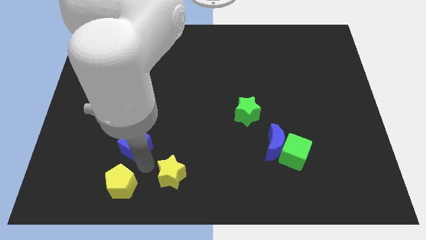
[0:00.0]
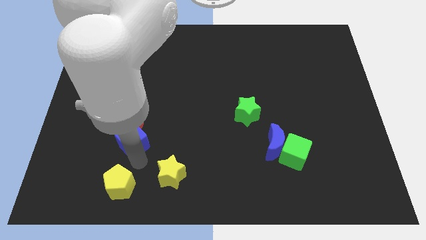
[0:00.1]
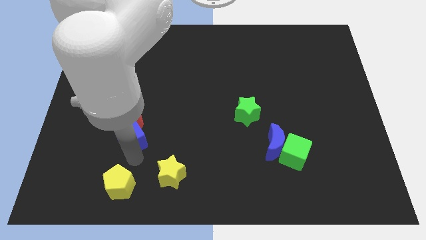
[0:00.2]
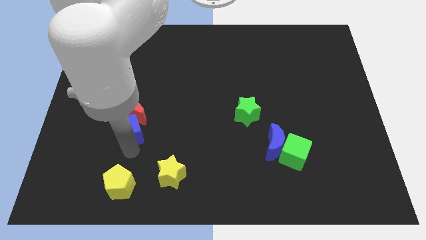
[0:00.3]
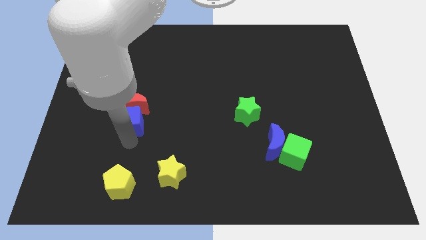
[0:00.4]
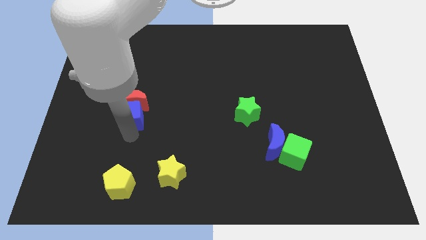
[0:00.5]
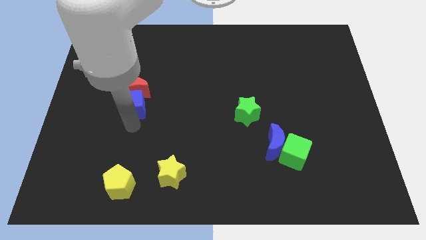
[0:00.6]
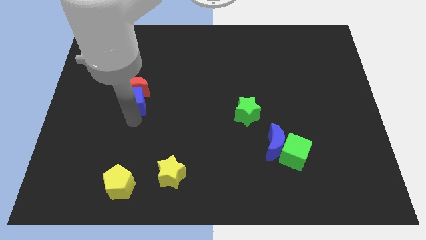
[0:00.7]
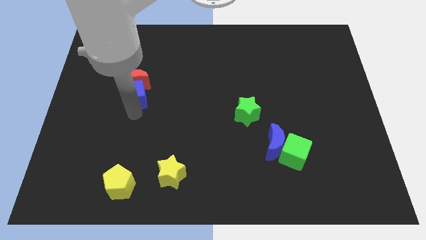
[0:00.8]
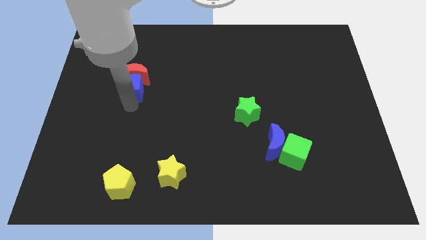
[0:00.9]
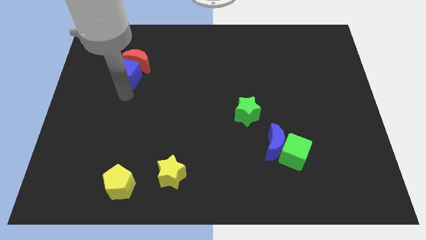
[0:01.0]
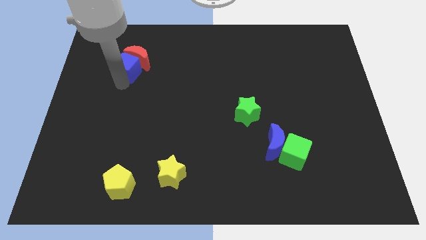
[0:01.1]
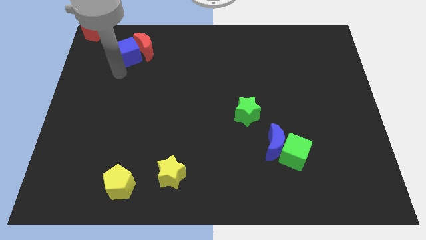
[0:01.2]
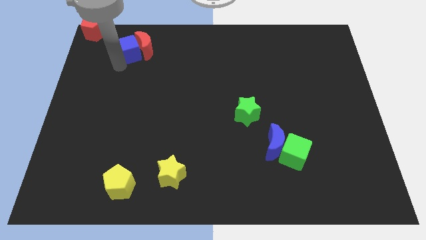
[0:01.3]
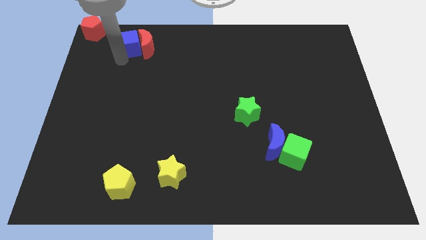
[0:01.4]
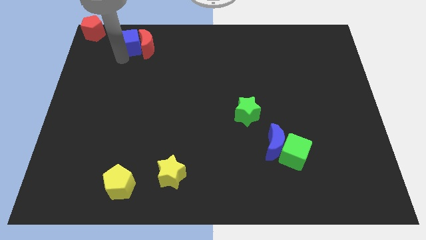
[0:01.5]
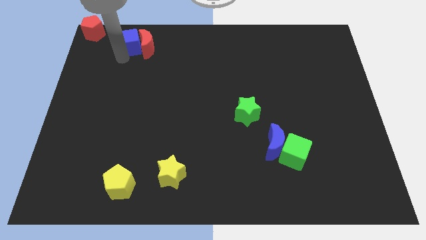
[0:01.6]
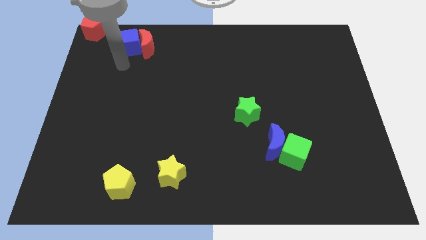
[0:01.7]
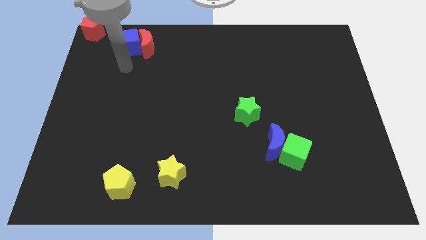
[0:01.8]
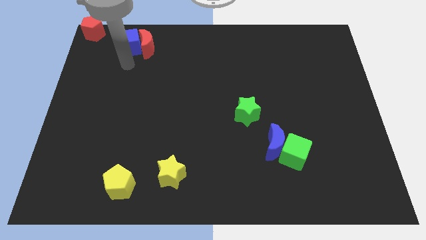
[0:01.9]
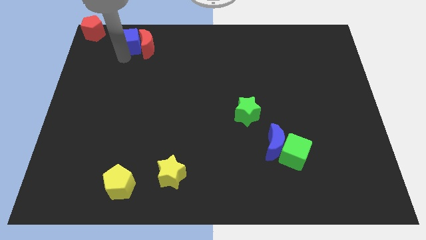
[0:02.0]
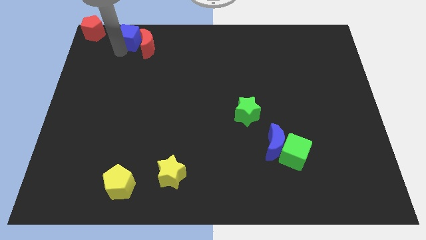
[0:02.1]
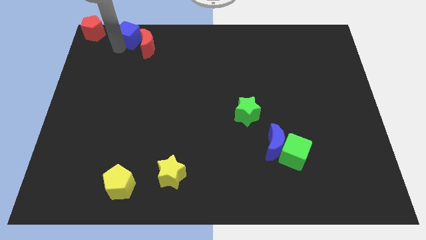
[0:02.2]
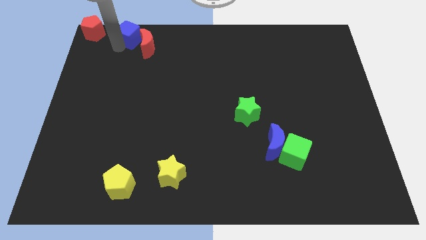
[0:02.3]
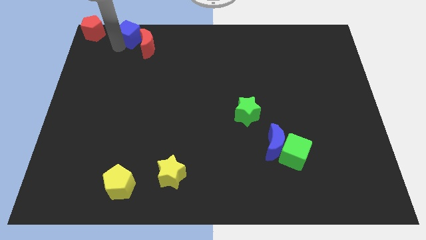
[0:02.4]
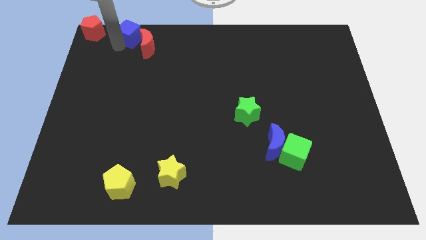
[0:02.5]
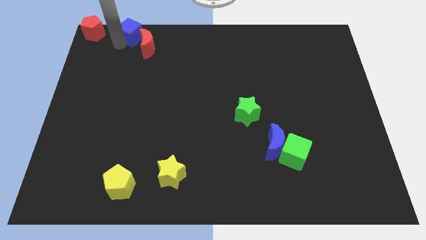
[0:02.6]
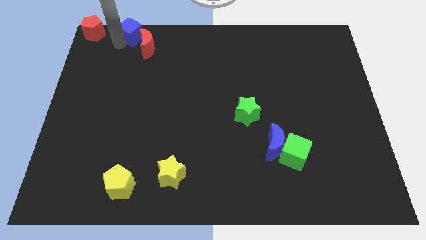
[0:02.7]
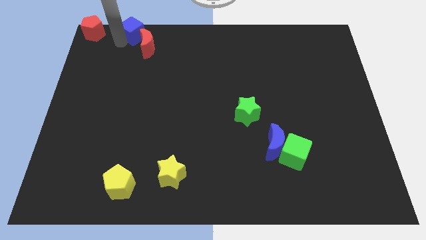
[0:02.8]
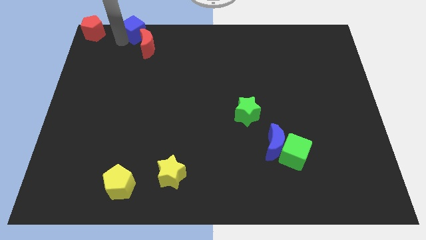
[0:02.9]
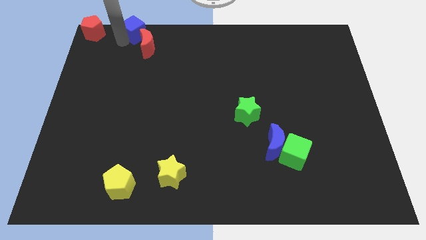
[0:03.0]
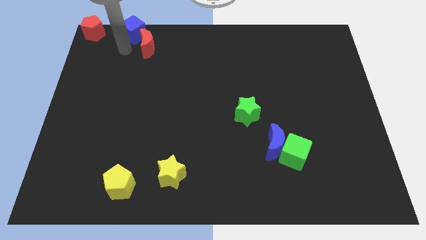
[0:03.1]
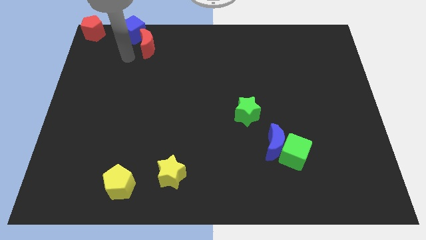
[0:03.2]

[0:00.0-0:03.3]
move the blue cube and red crescent together to the right side of the red pentagon

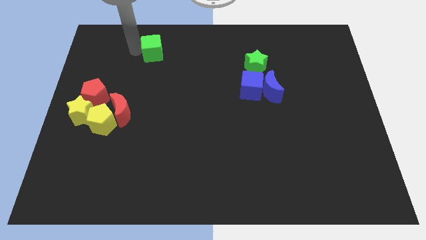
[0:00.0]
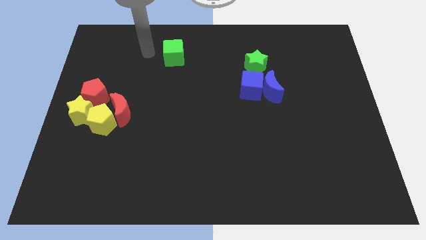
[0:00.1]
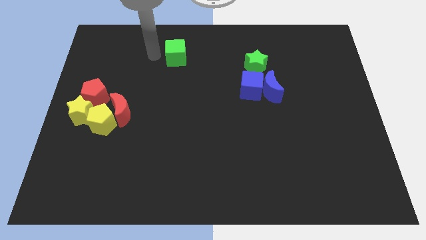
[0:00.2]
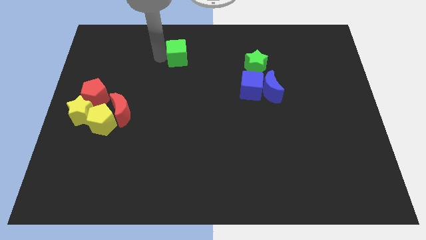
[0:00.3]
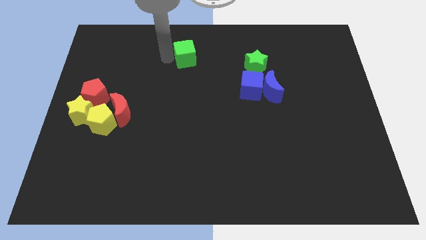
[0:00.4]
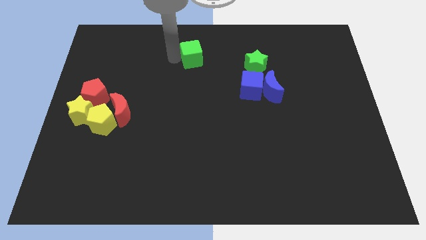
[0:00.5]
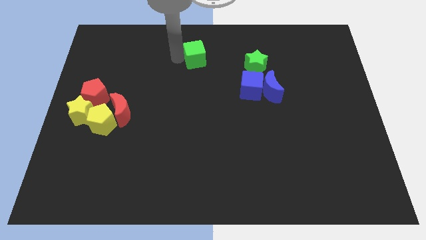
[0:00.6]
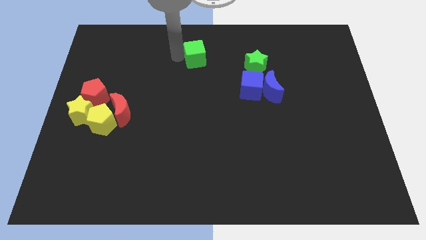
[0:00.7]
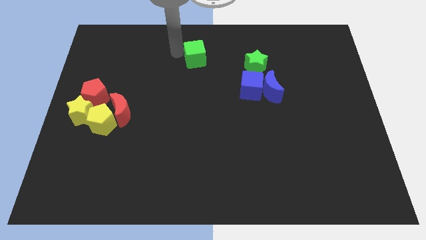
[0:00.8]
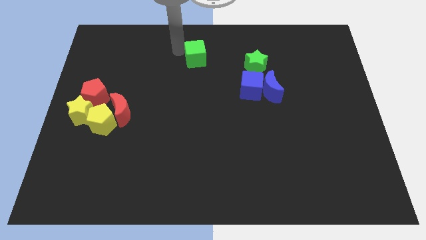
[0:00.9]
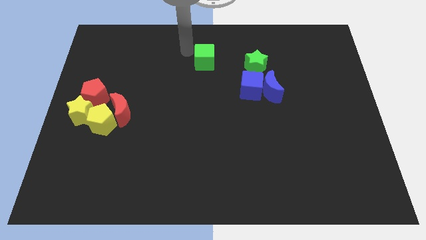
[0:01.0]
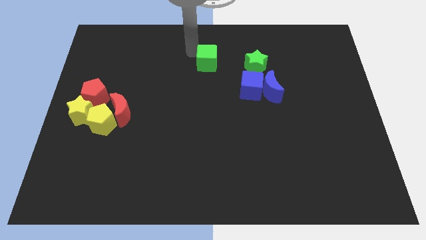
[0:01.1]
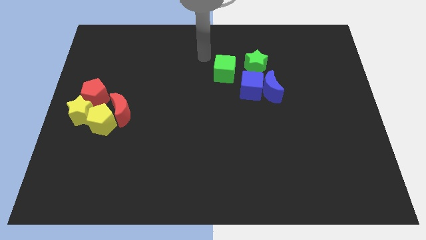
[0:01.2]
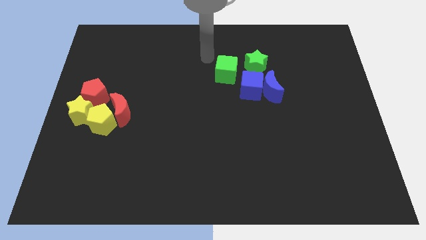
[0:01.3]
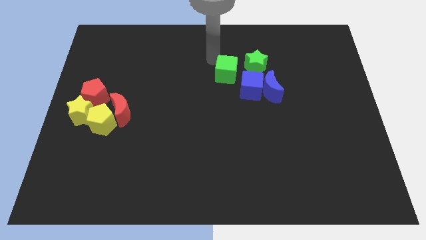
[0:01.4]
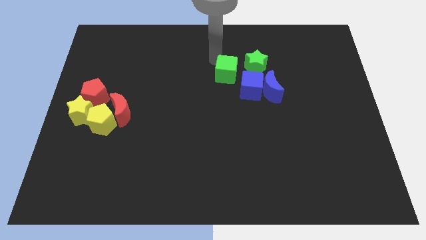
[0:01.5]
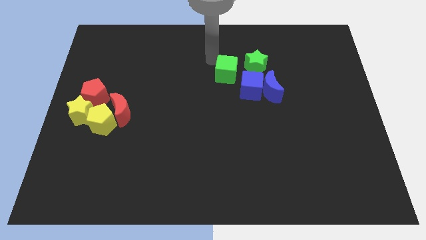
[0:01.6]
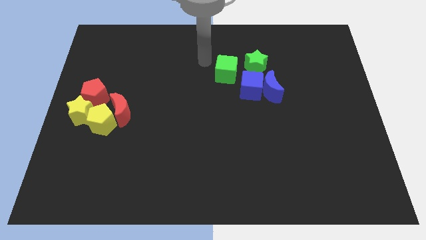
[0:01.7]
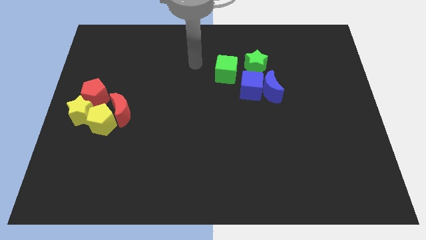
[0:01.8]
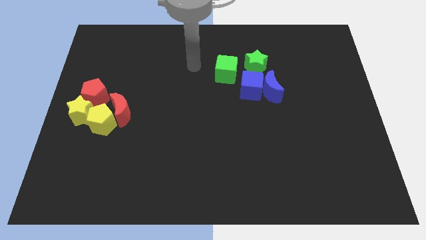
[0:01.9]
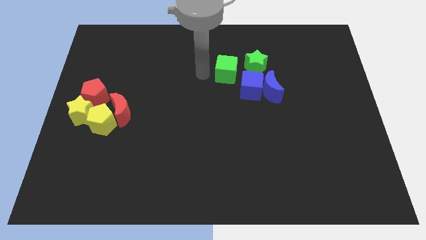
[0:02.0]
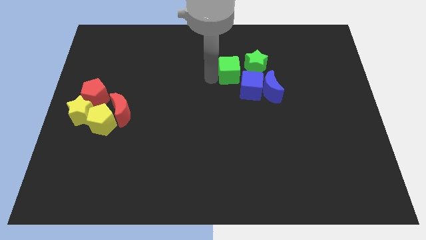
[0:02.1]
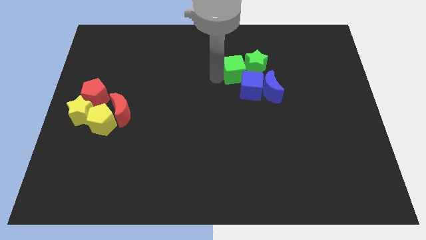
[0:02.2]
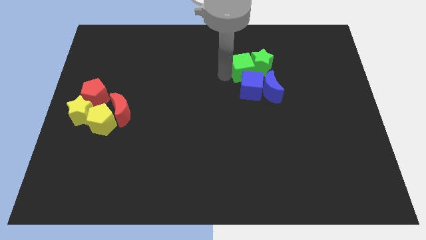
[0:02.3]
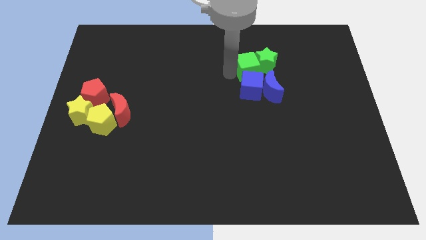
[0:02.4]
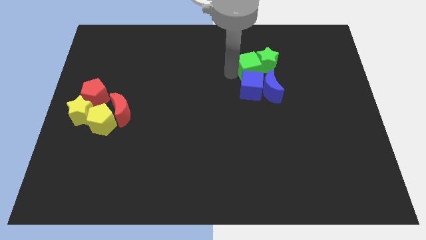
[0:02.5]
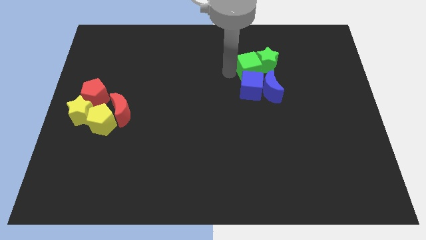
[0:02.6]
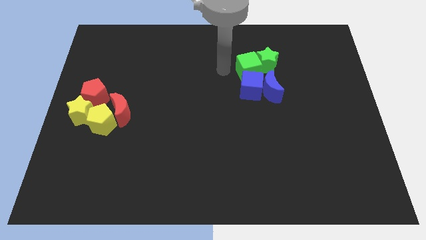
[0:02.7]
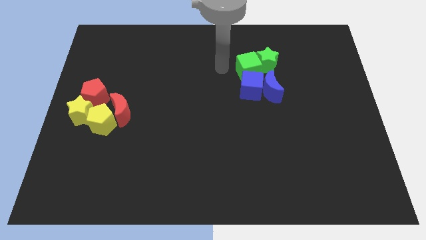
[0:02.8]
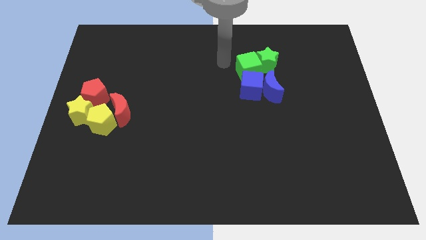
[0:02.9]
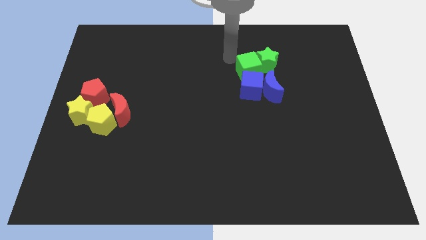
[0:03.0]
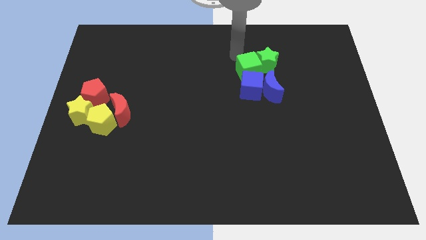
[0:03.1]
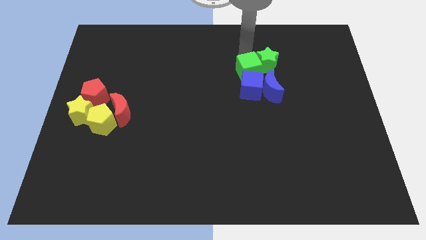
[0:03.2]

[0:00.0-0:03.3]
place the green cube to the left side of green star

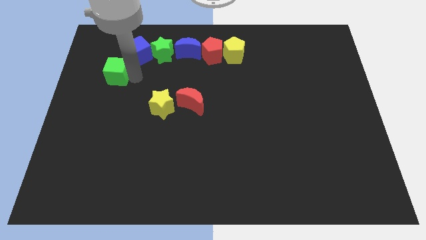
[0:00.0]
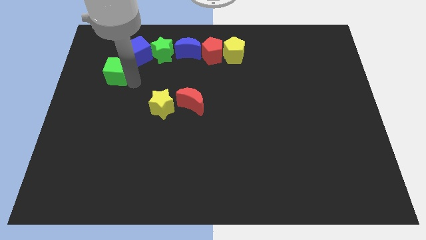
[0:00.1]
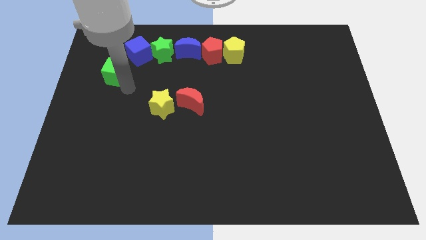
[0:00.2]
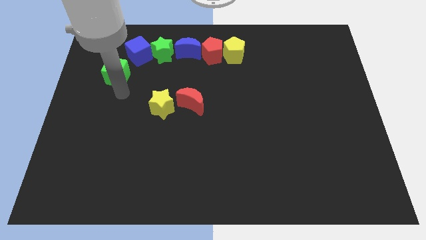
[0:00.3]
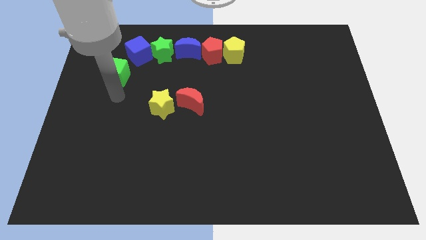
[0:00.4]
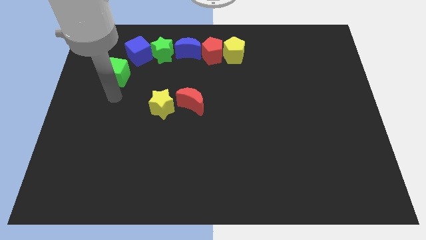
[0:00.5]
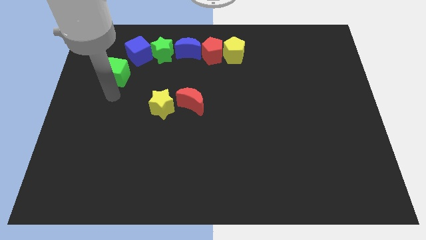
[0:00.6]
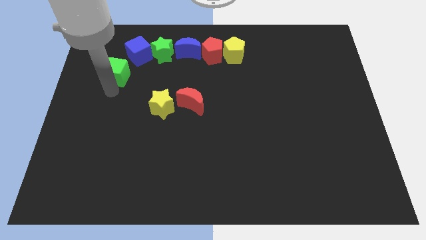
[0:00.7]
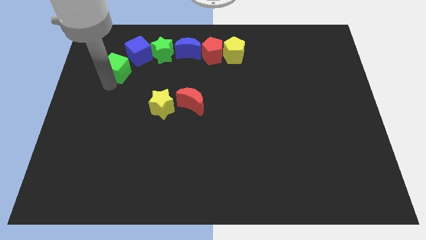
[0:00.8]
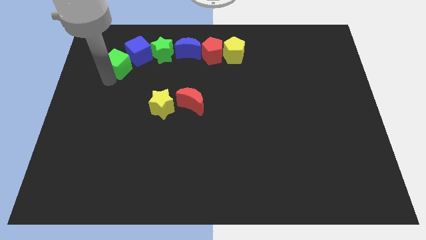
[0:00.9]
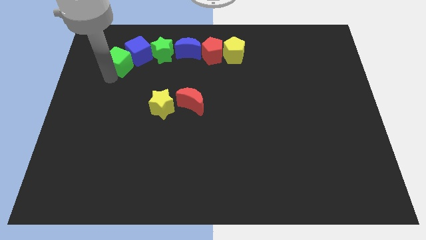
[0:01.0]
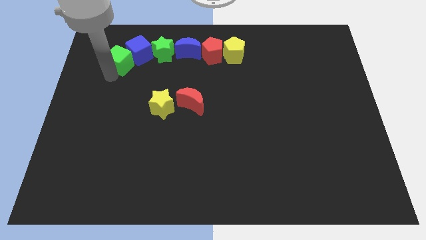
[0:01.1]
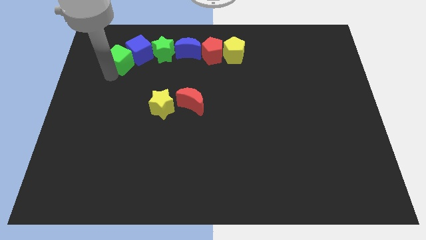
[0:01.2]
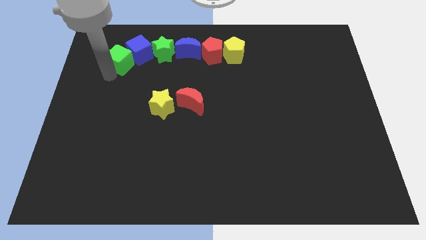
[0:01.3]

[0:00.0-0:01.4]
place green cube left to the blue cube

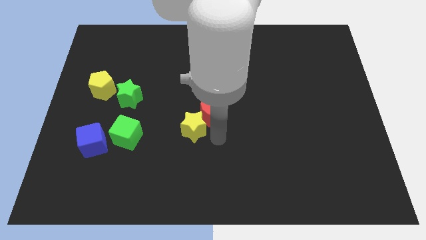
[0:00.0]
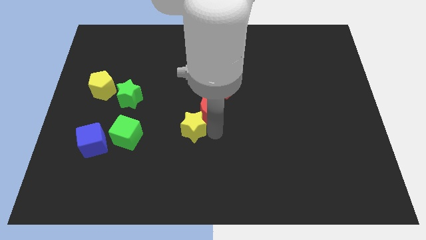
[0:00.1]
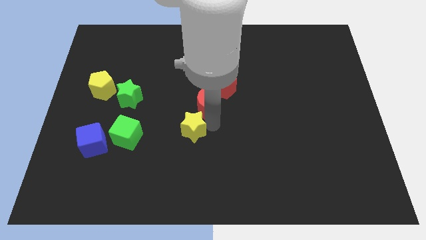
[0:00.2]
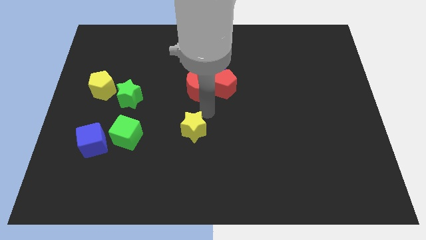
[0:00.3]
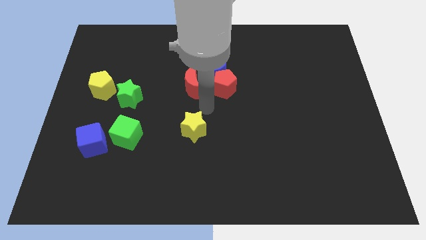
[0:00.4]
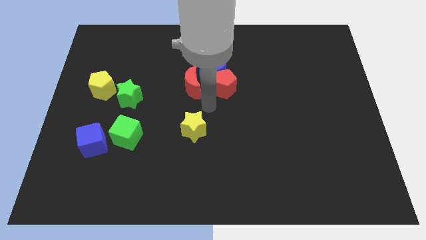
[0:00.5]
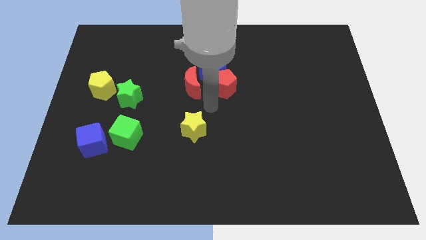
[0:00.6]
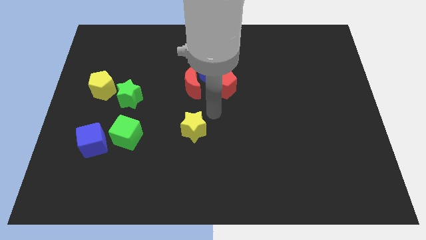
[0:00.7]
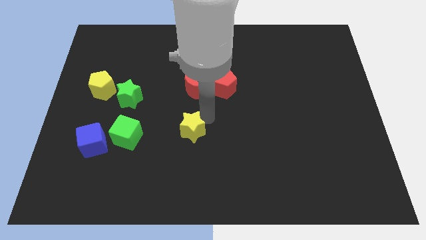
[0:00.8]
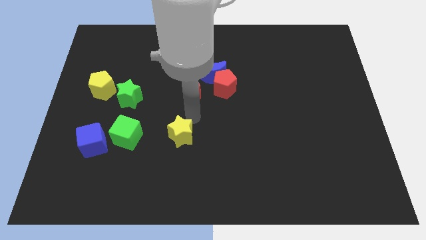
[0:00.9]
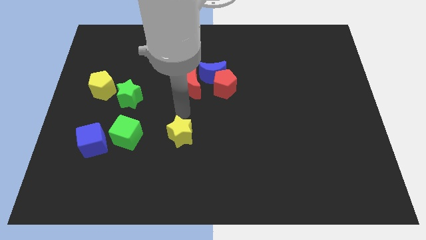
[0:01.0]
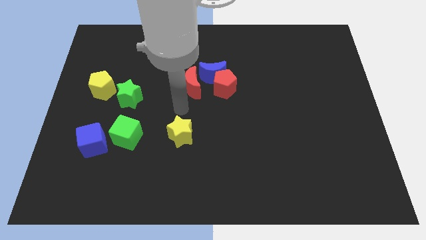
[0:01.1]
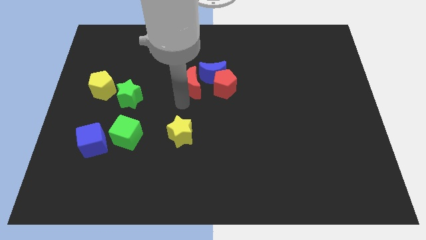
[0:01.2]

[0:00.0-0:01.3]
separate the red moon and yellow star
